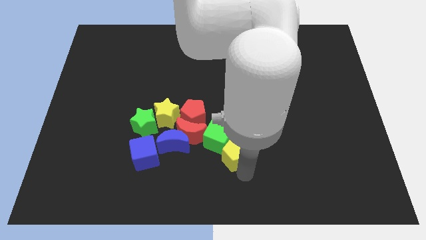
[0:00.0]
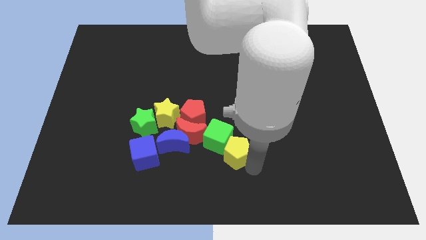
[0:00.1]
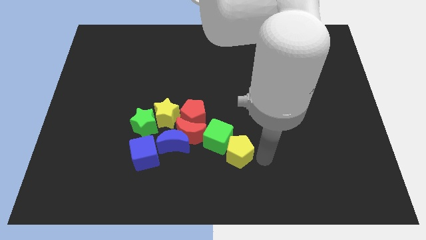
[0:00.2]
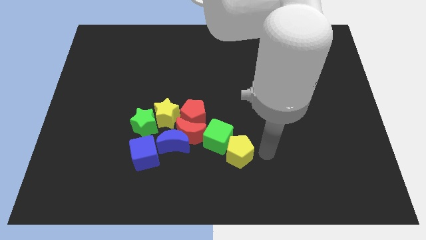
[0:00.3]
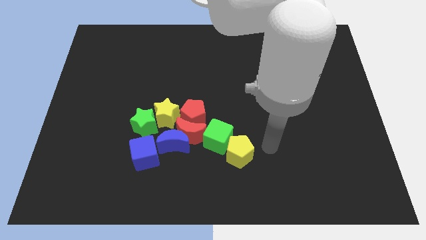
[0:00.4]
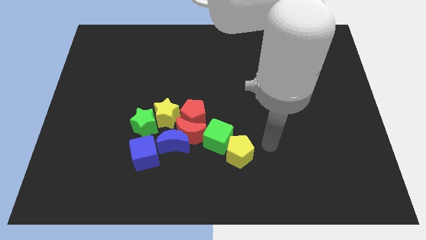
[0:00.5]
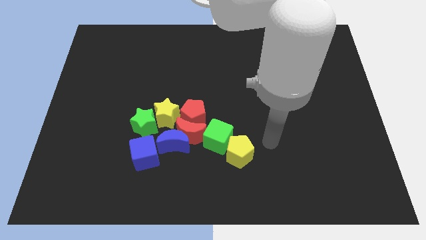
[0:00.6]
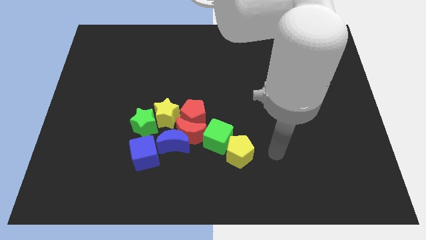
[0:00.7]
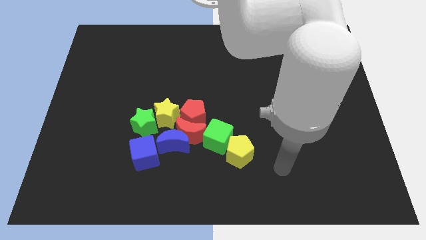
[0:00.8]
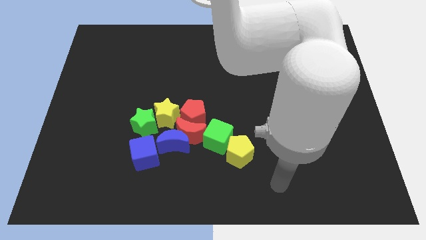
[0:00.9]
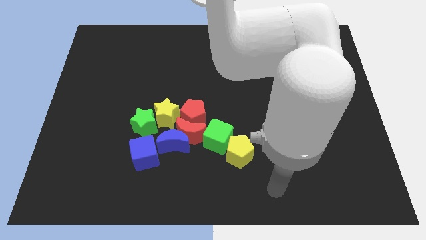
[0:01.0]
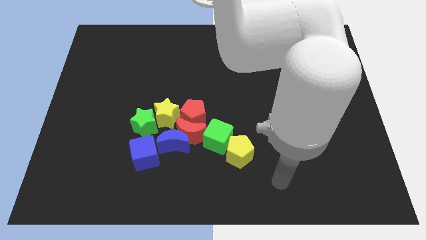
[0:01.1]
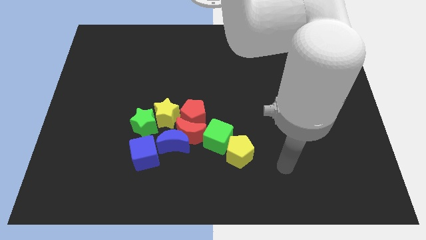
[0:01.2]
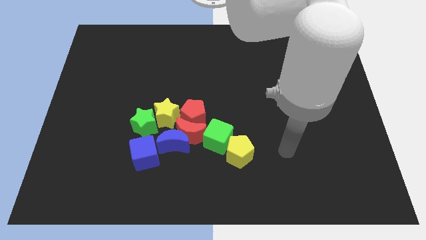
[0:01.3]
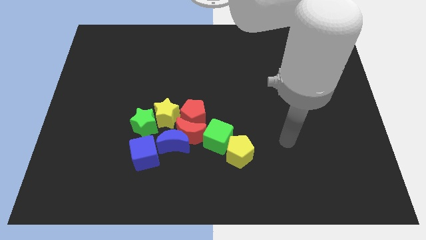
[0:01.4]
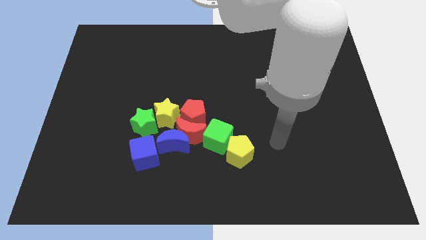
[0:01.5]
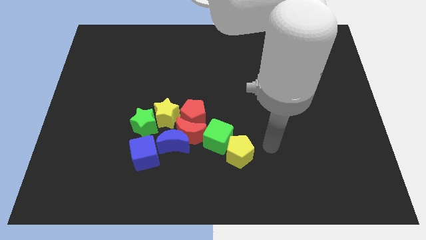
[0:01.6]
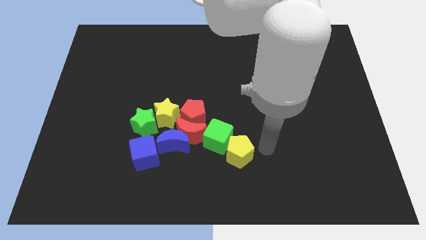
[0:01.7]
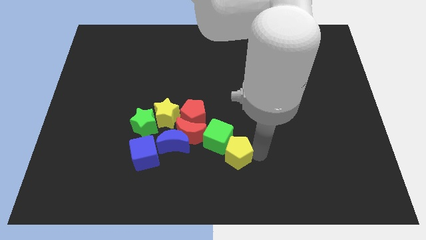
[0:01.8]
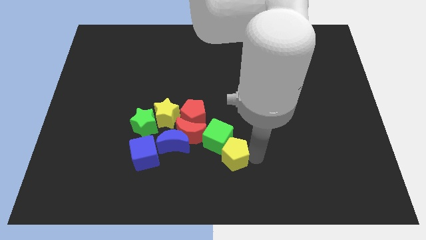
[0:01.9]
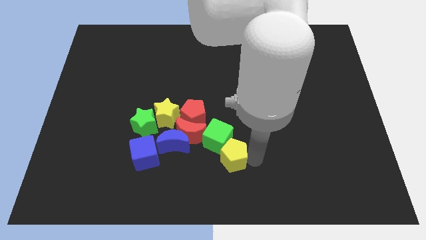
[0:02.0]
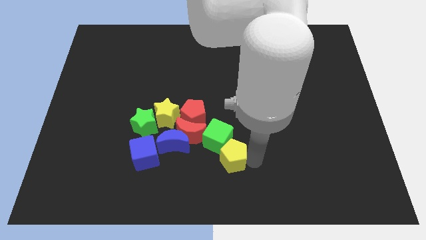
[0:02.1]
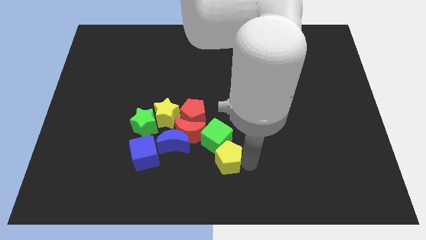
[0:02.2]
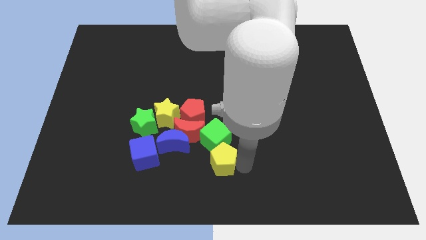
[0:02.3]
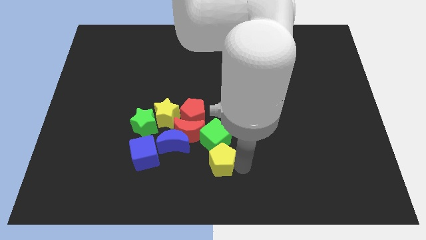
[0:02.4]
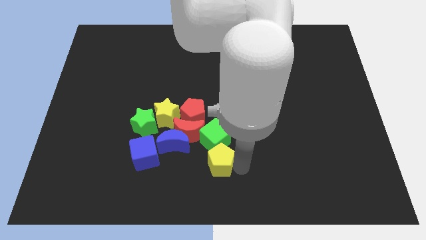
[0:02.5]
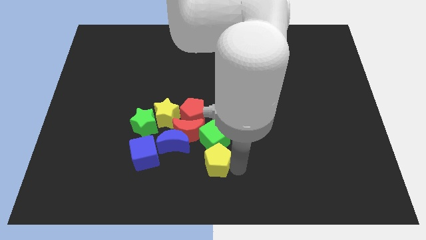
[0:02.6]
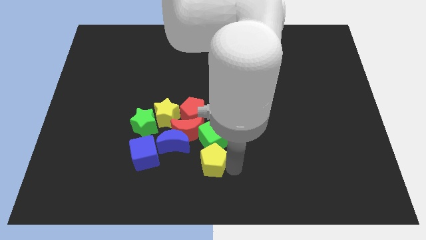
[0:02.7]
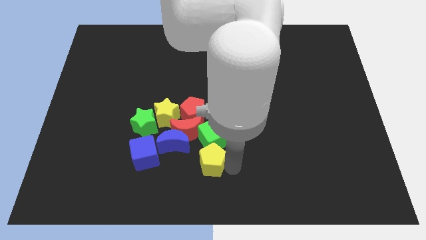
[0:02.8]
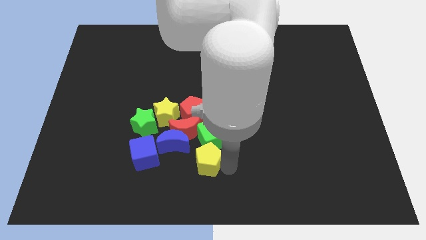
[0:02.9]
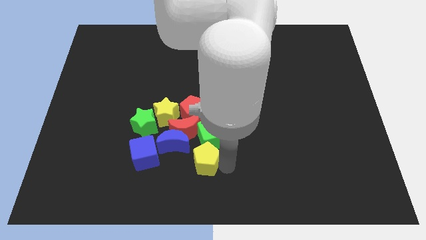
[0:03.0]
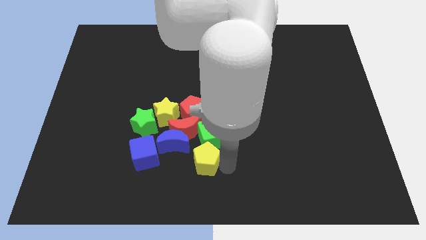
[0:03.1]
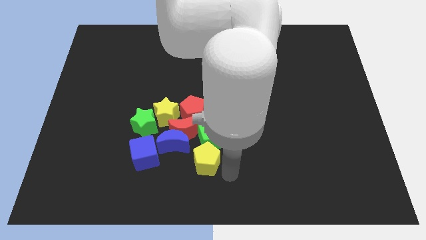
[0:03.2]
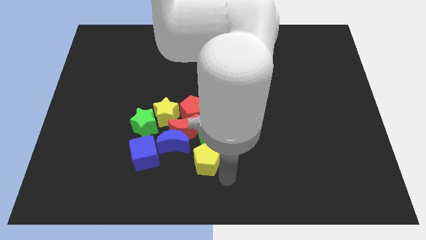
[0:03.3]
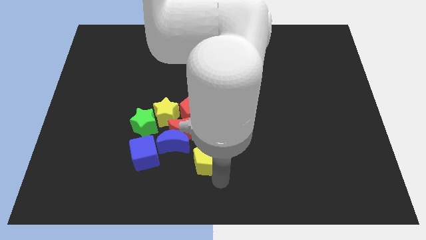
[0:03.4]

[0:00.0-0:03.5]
move the yellow pentagon below the green cube

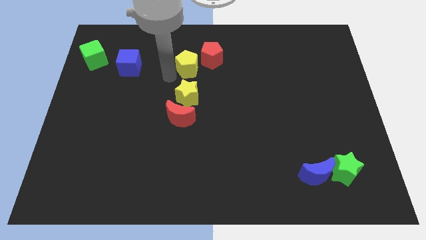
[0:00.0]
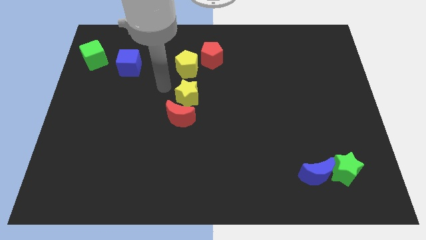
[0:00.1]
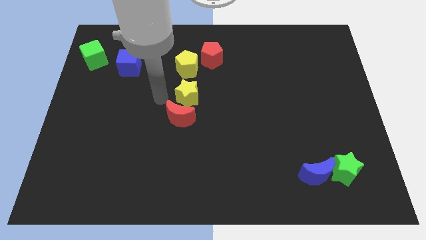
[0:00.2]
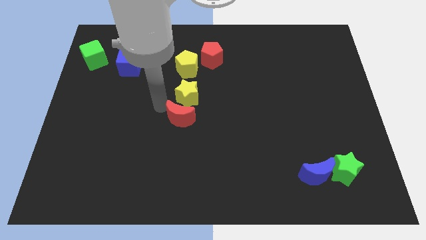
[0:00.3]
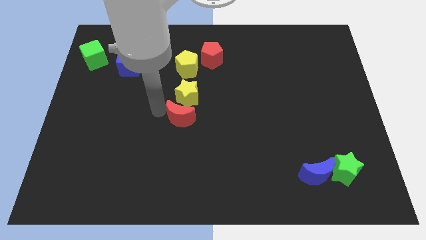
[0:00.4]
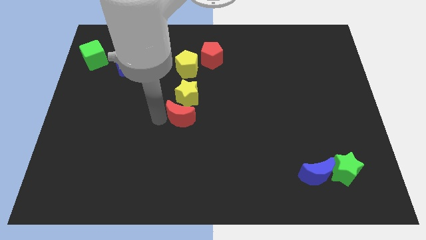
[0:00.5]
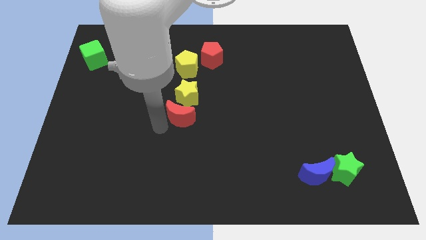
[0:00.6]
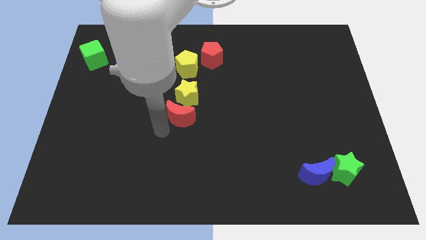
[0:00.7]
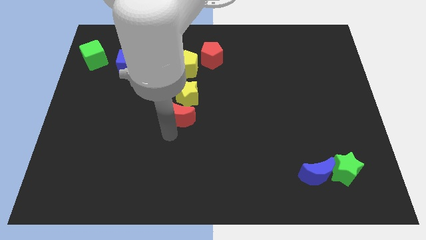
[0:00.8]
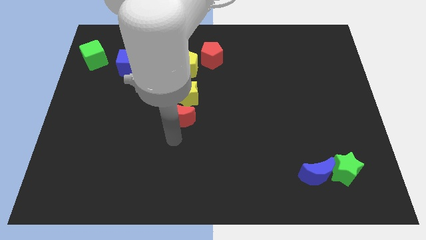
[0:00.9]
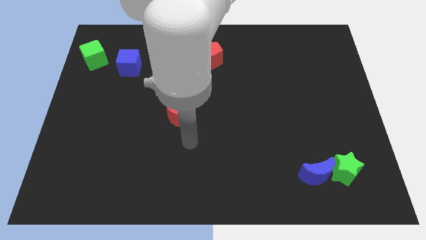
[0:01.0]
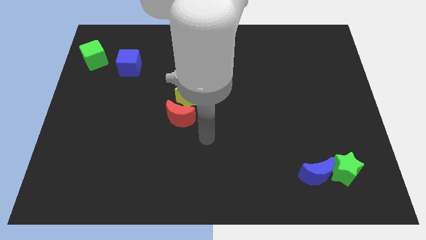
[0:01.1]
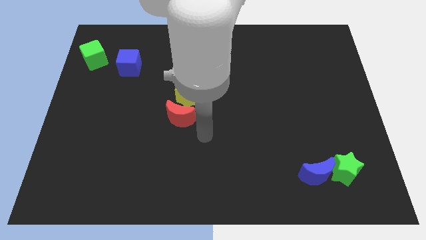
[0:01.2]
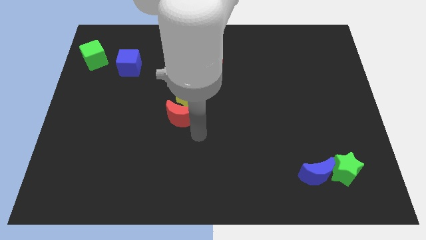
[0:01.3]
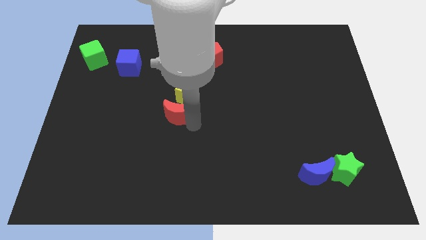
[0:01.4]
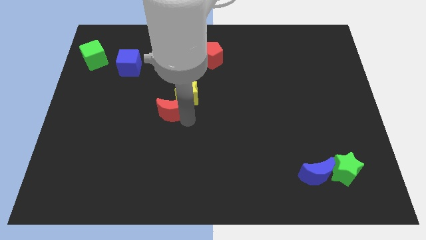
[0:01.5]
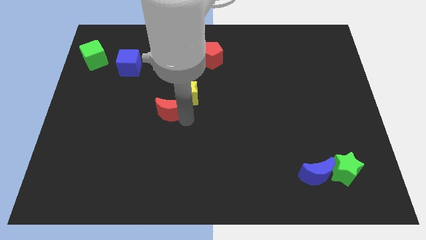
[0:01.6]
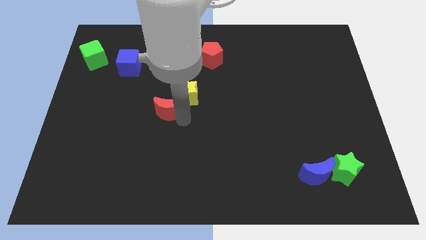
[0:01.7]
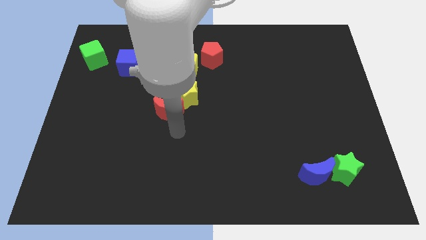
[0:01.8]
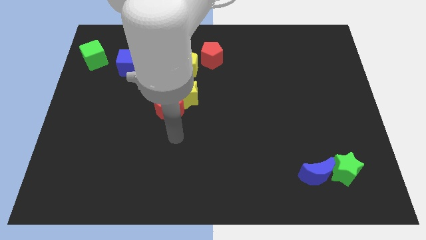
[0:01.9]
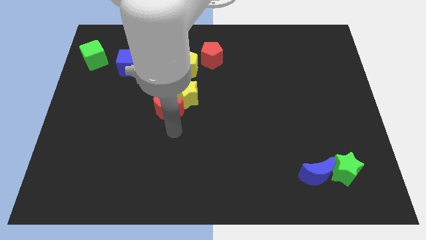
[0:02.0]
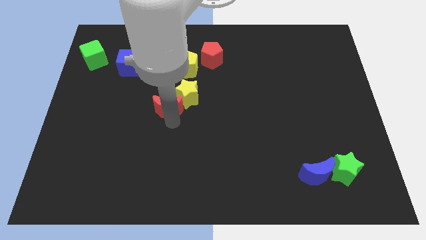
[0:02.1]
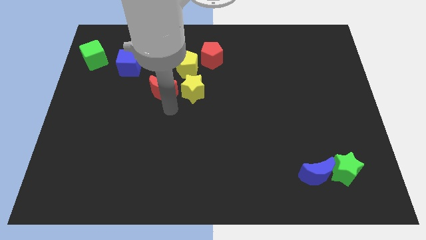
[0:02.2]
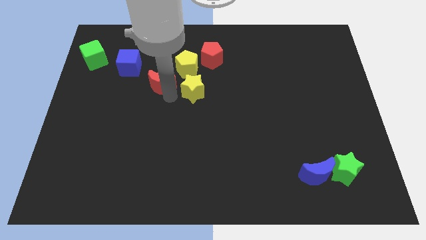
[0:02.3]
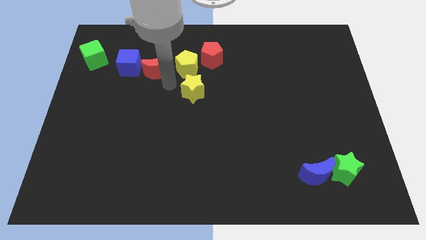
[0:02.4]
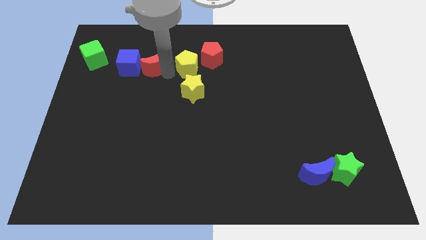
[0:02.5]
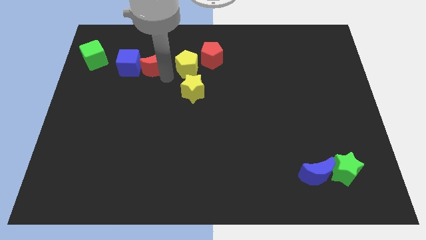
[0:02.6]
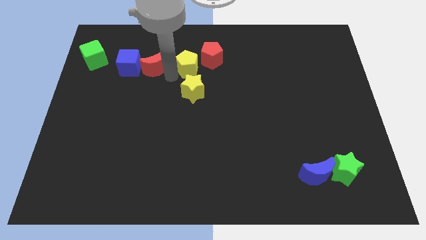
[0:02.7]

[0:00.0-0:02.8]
place red moon in between blue cube and yellow pentagon

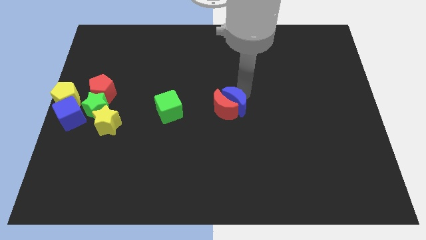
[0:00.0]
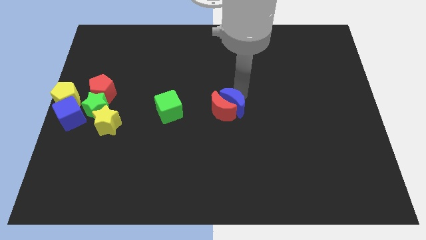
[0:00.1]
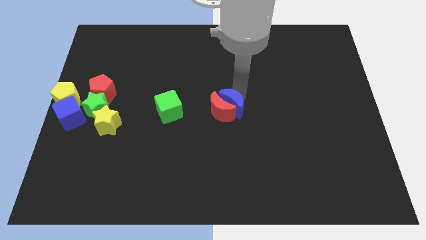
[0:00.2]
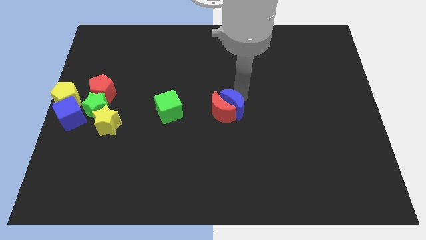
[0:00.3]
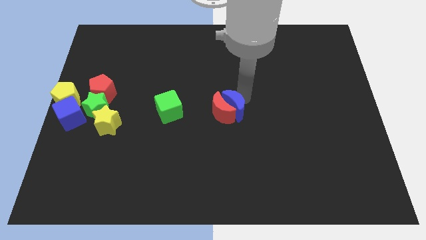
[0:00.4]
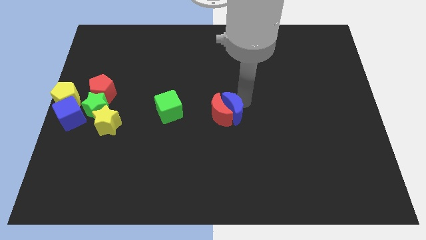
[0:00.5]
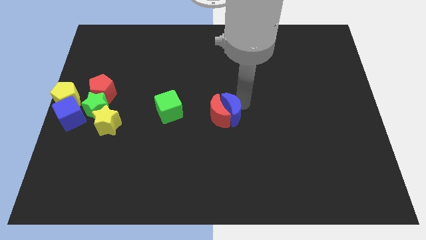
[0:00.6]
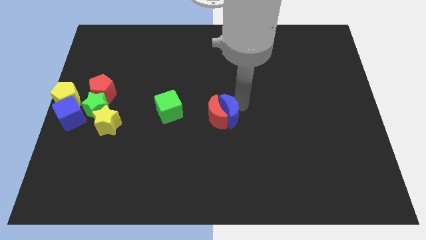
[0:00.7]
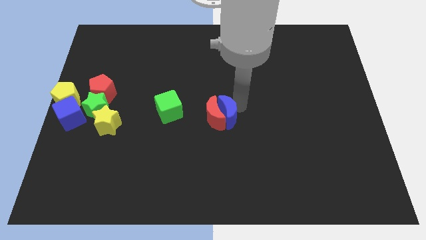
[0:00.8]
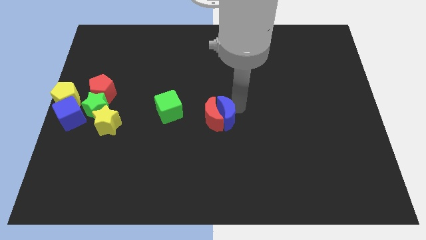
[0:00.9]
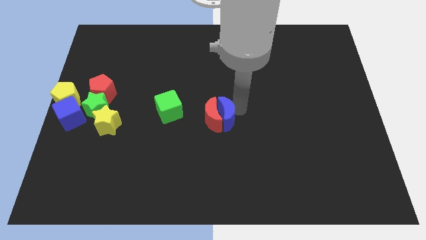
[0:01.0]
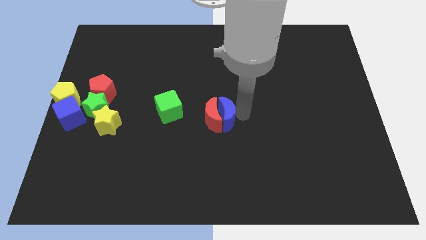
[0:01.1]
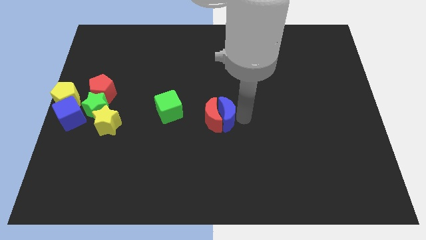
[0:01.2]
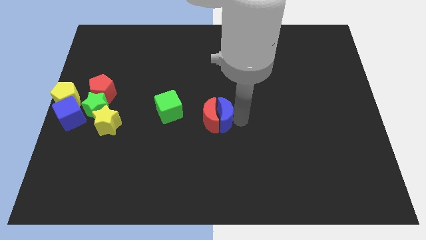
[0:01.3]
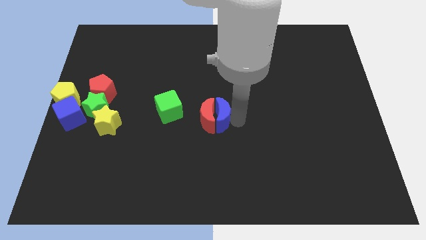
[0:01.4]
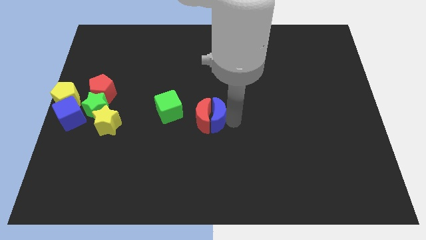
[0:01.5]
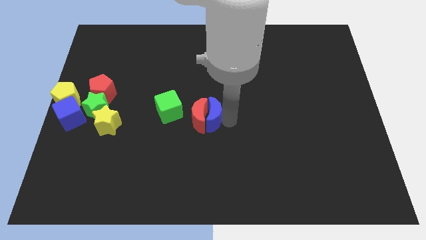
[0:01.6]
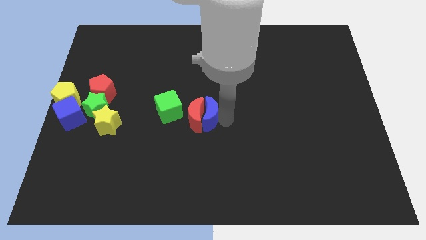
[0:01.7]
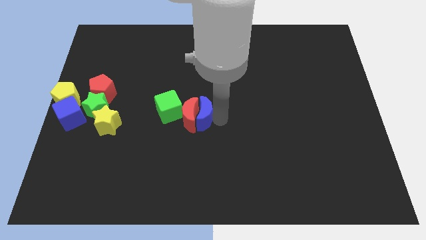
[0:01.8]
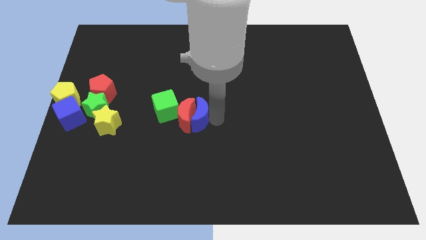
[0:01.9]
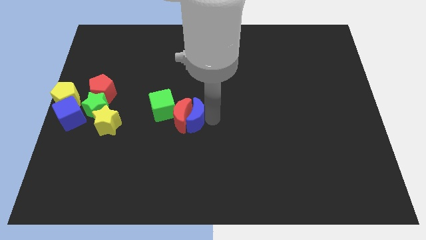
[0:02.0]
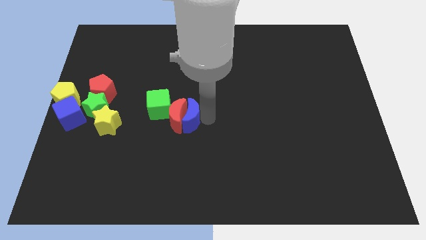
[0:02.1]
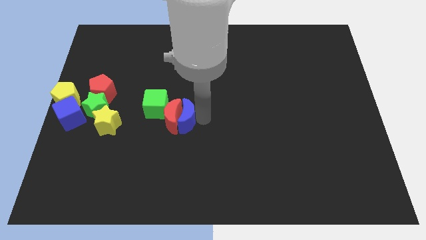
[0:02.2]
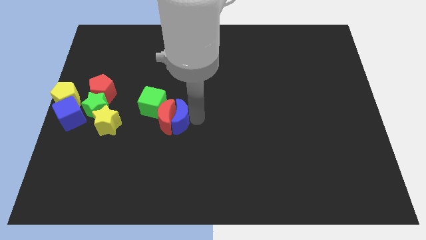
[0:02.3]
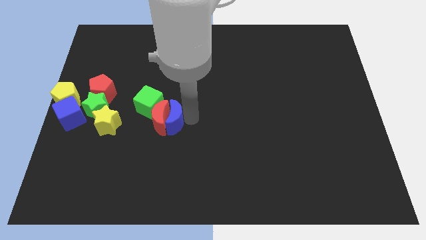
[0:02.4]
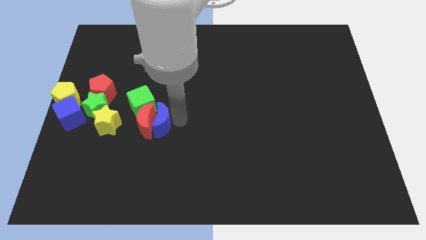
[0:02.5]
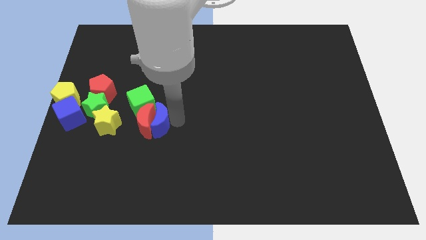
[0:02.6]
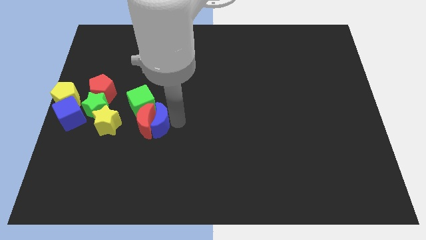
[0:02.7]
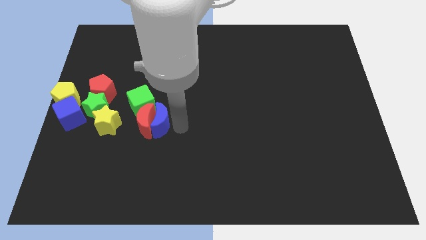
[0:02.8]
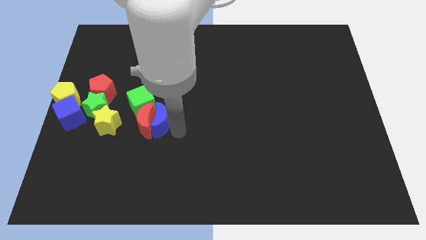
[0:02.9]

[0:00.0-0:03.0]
move moons to the bottom right of green cube
